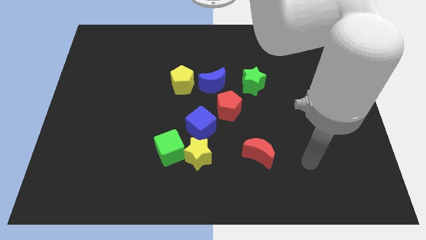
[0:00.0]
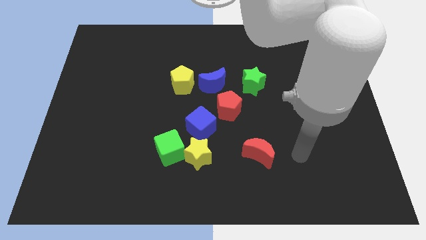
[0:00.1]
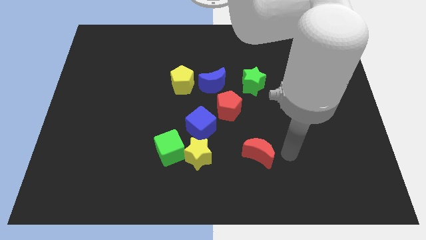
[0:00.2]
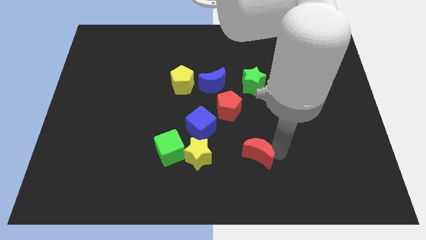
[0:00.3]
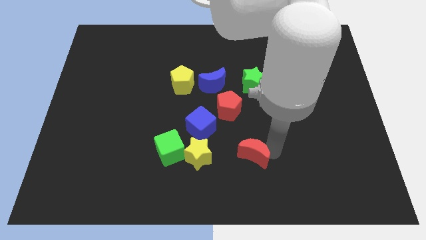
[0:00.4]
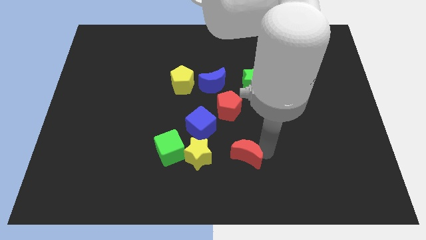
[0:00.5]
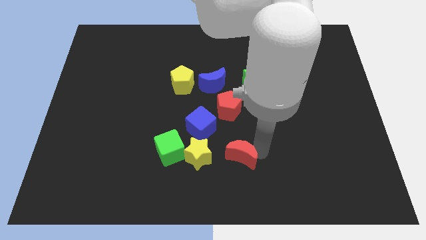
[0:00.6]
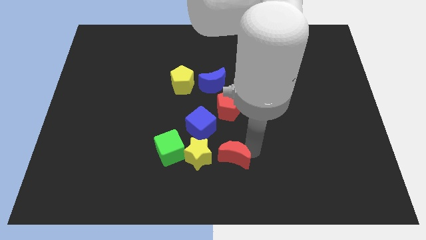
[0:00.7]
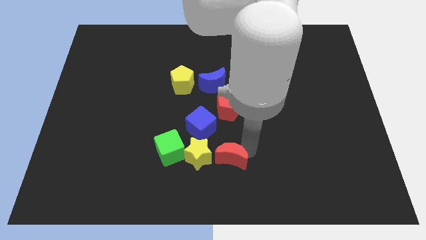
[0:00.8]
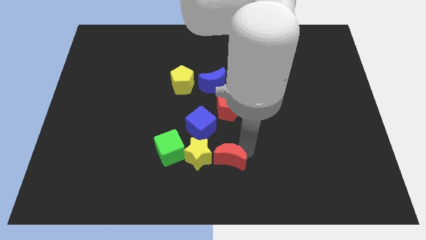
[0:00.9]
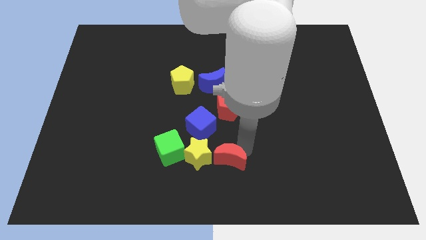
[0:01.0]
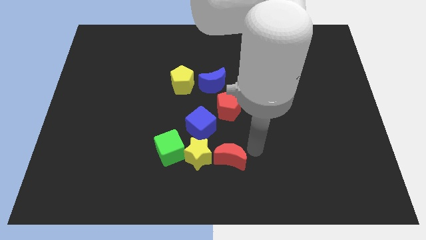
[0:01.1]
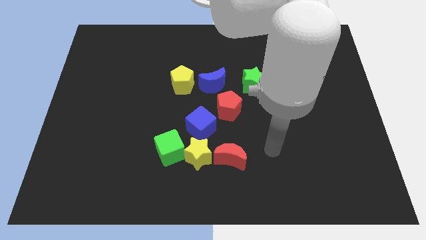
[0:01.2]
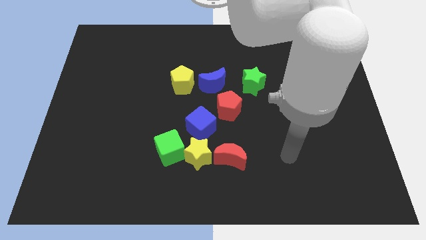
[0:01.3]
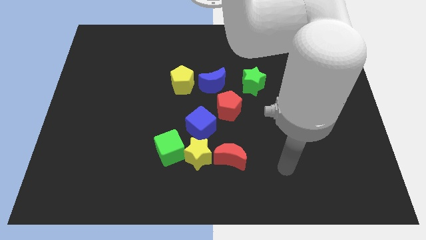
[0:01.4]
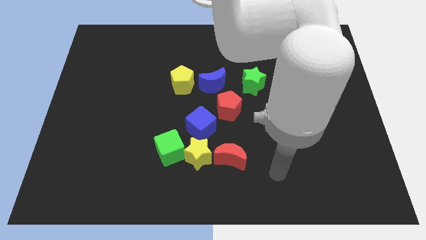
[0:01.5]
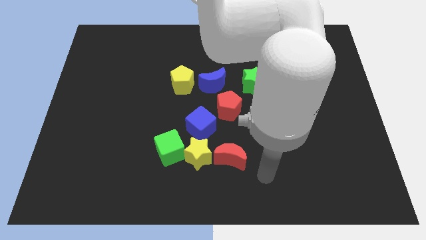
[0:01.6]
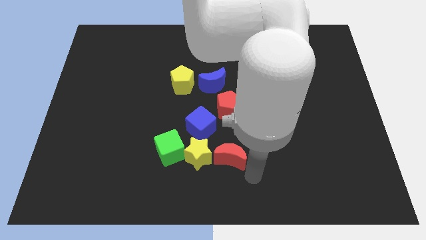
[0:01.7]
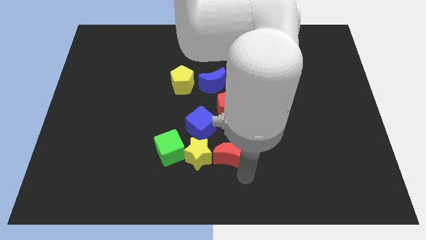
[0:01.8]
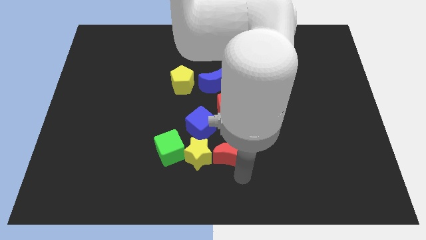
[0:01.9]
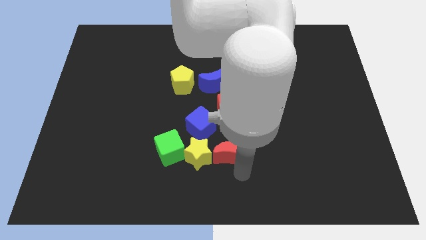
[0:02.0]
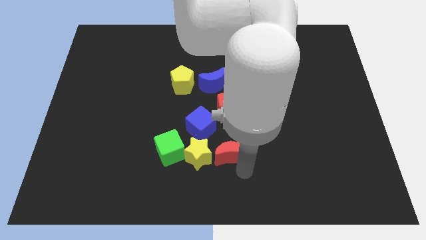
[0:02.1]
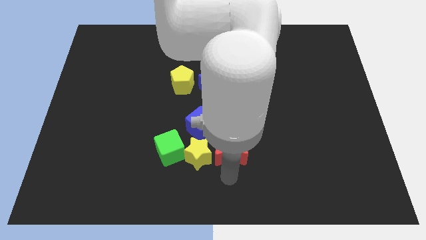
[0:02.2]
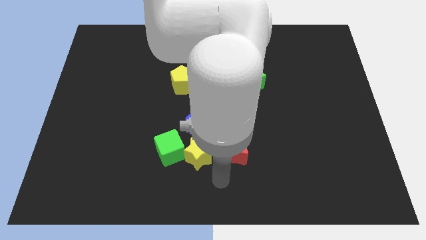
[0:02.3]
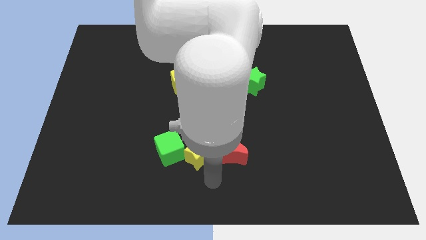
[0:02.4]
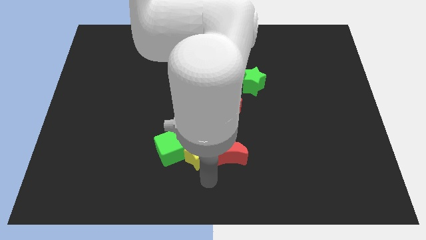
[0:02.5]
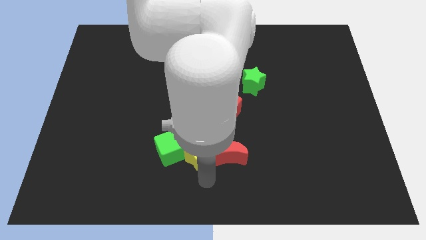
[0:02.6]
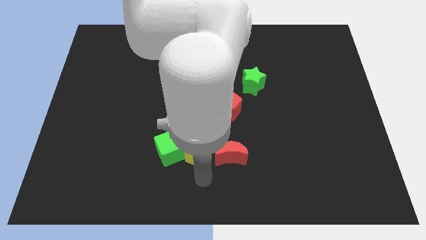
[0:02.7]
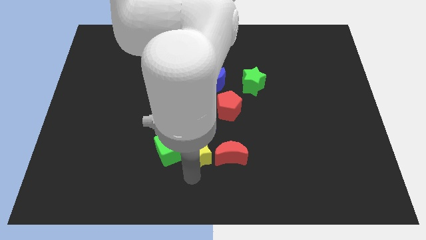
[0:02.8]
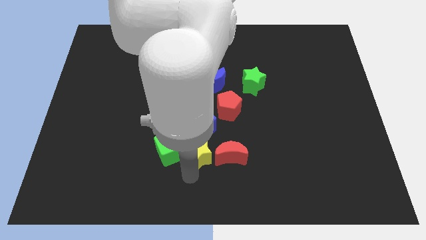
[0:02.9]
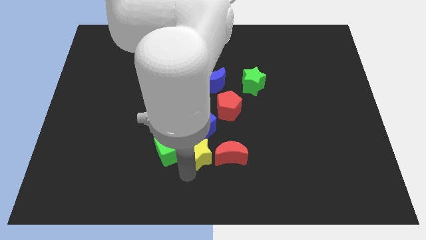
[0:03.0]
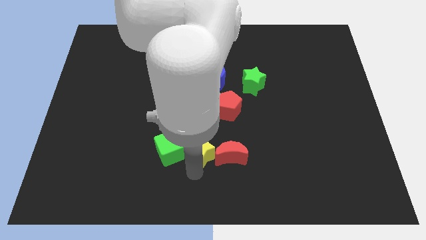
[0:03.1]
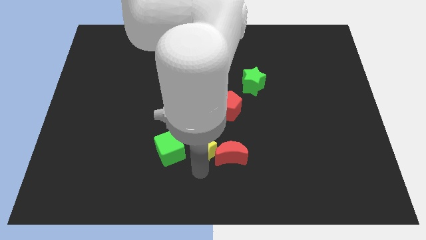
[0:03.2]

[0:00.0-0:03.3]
make a horizontal line with the red moon yellow star and green cube

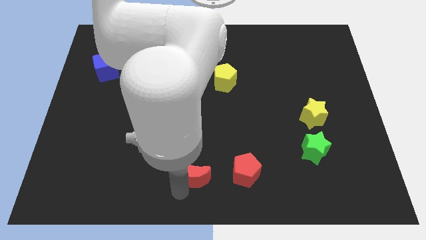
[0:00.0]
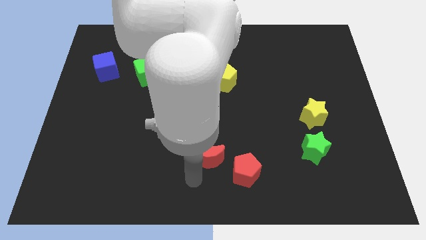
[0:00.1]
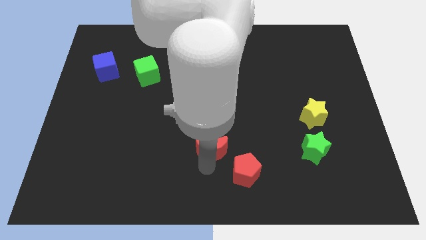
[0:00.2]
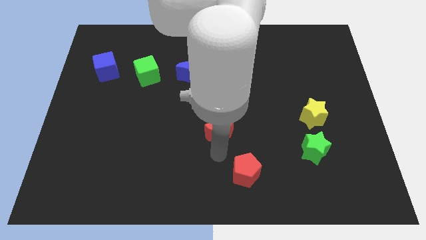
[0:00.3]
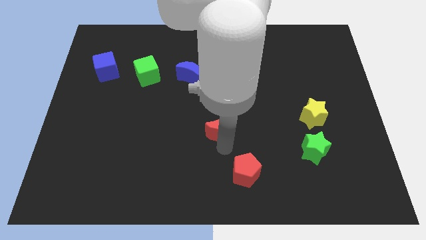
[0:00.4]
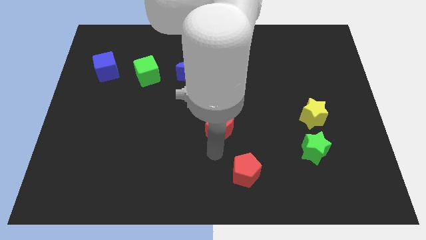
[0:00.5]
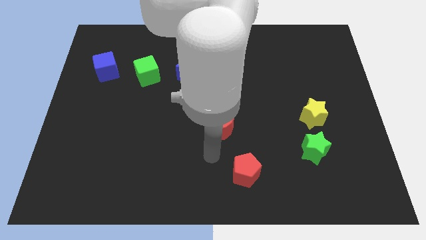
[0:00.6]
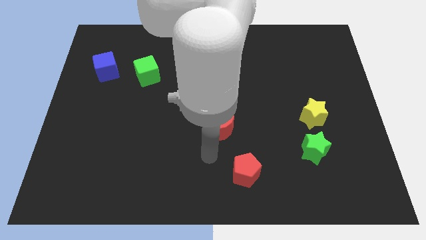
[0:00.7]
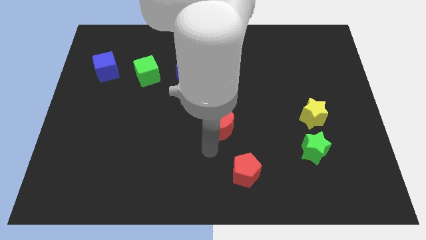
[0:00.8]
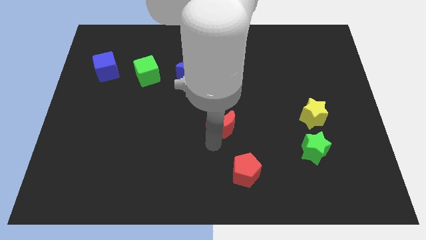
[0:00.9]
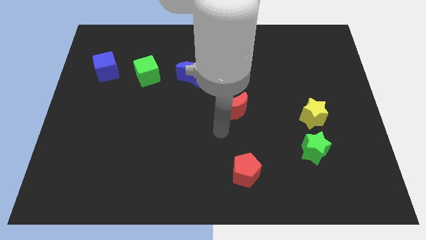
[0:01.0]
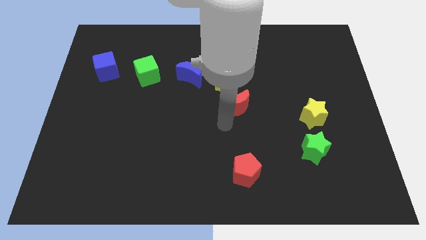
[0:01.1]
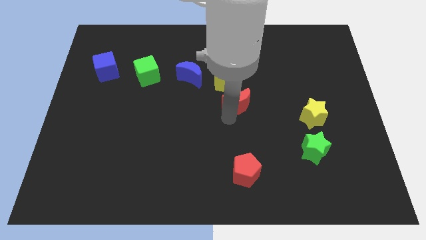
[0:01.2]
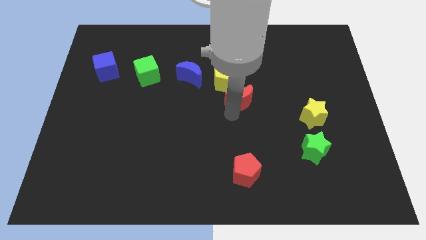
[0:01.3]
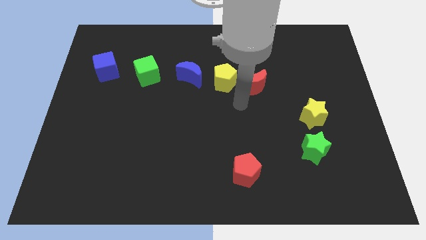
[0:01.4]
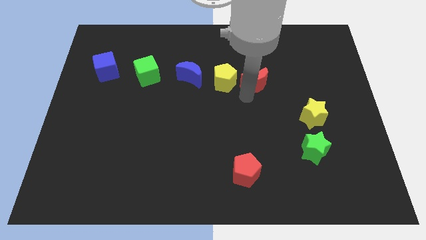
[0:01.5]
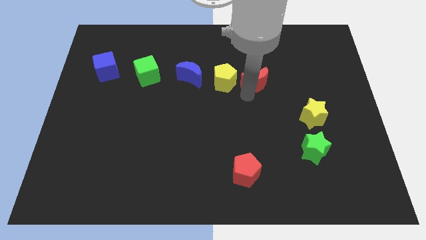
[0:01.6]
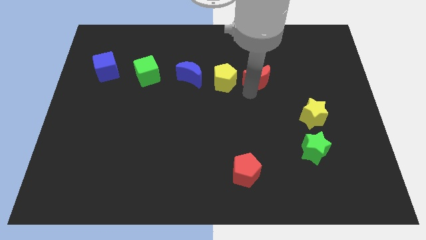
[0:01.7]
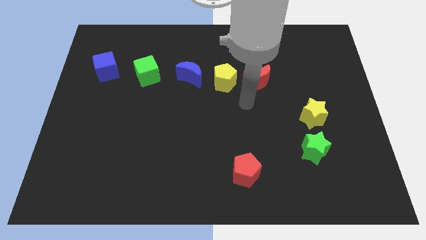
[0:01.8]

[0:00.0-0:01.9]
place red crescent beside yellow pentagon

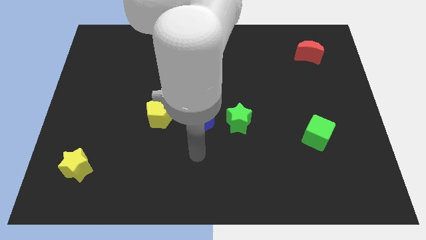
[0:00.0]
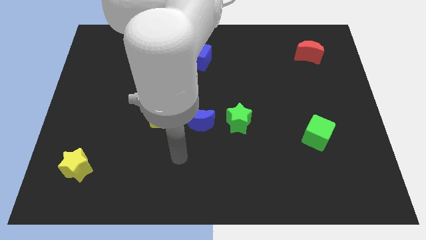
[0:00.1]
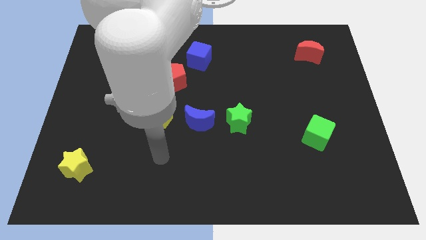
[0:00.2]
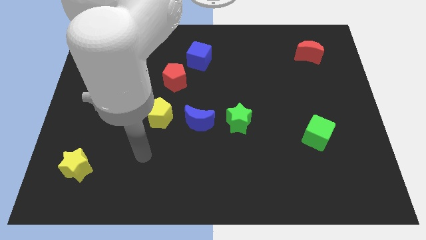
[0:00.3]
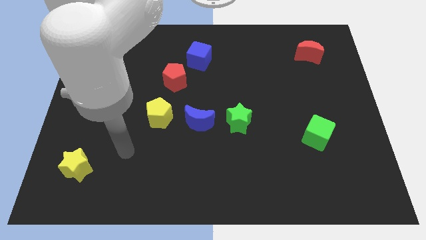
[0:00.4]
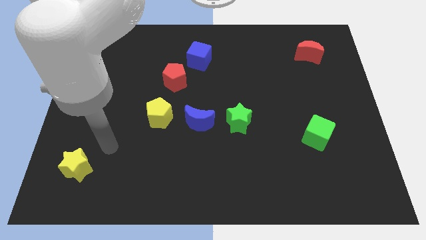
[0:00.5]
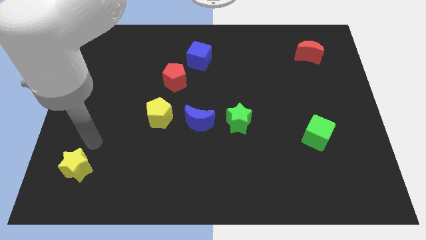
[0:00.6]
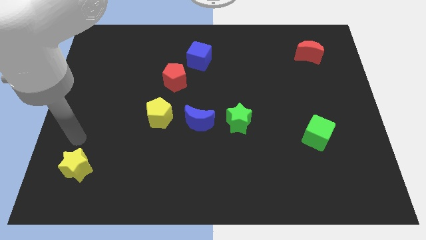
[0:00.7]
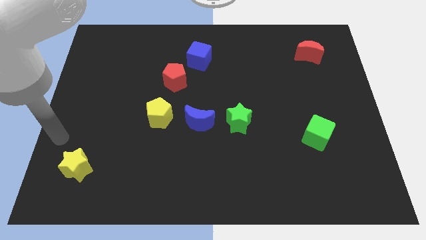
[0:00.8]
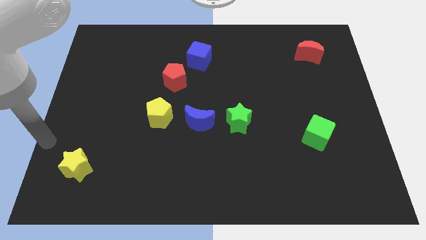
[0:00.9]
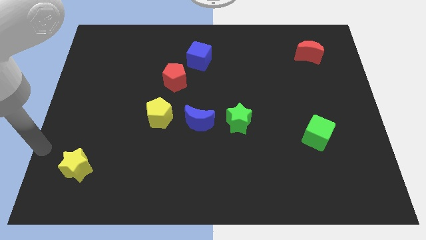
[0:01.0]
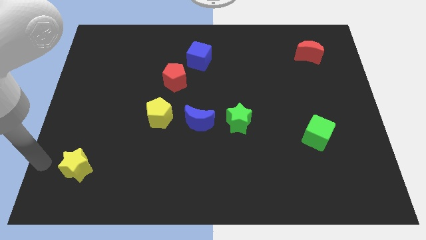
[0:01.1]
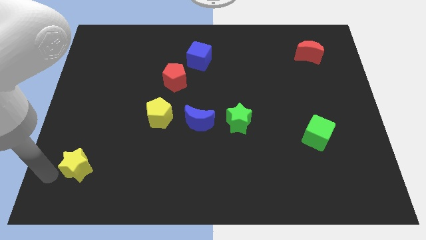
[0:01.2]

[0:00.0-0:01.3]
point the arm to the left of the yellow star

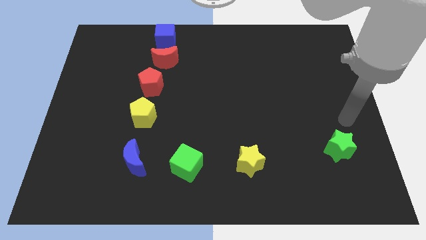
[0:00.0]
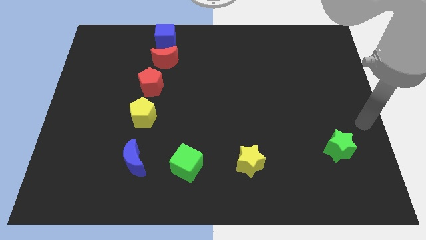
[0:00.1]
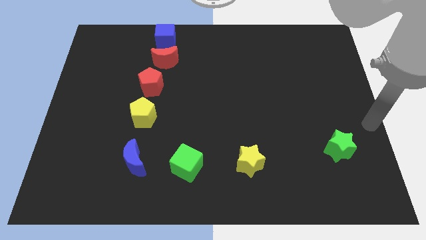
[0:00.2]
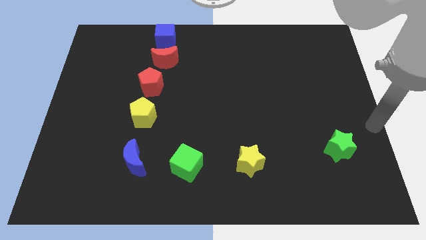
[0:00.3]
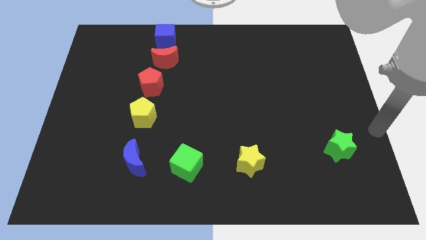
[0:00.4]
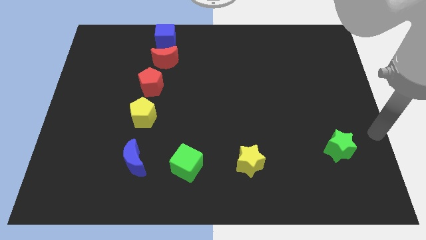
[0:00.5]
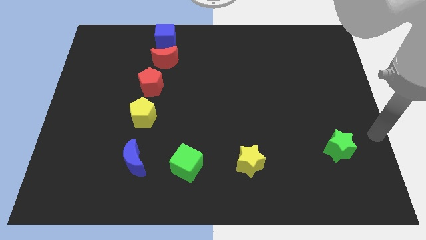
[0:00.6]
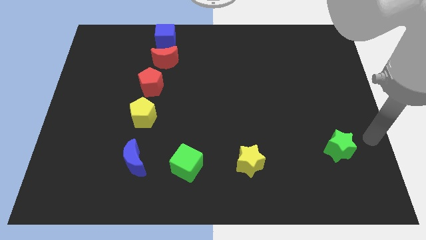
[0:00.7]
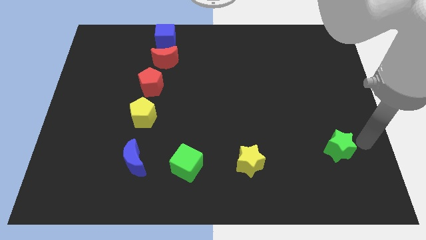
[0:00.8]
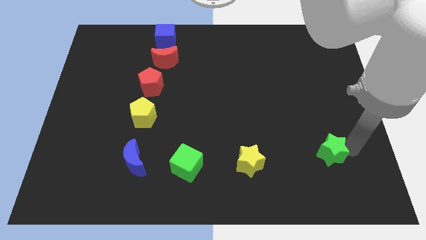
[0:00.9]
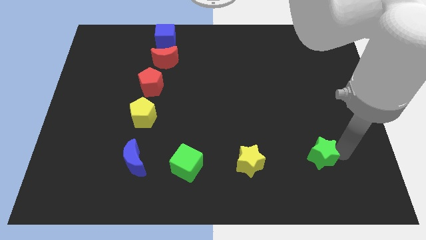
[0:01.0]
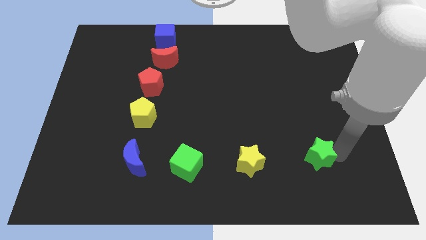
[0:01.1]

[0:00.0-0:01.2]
point the arm to the right side of the green star

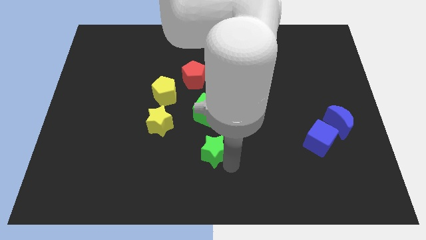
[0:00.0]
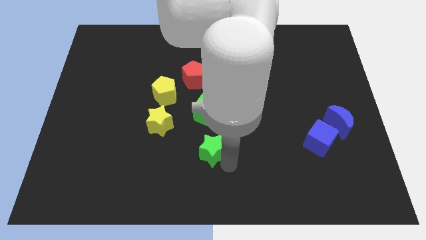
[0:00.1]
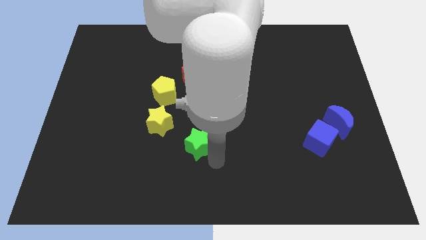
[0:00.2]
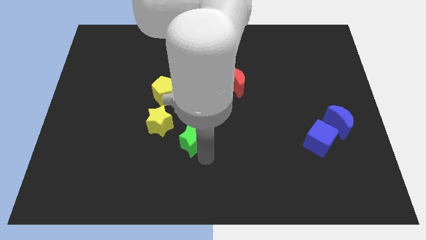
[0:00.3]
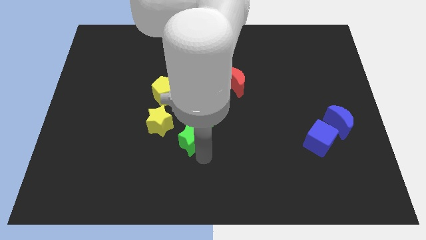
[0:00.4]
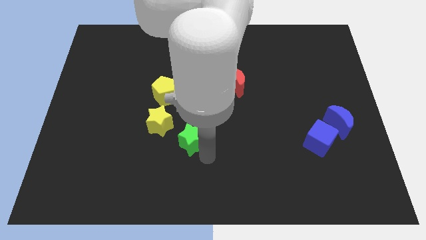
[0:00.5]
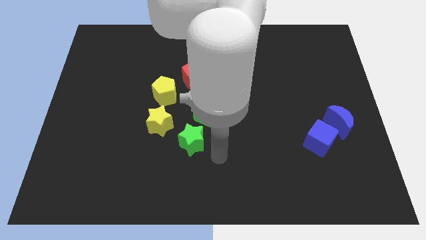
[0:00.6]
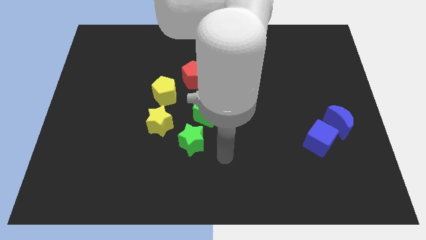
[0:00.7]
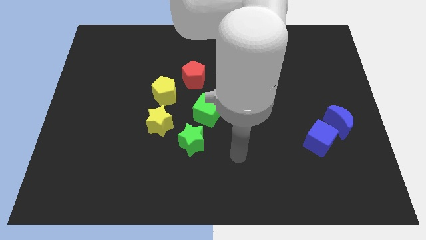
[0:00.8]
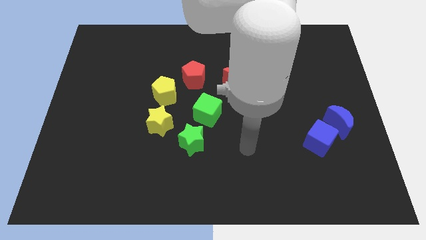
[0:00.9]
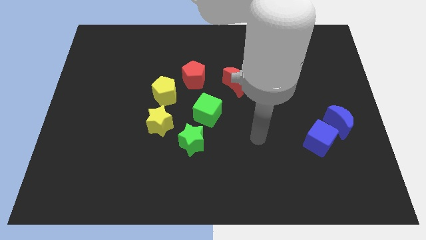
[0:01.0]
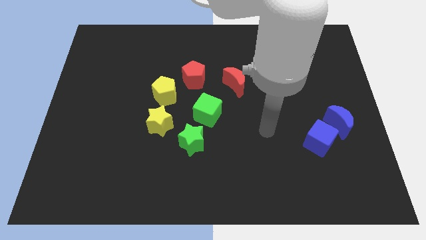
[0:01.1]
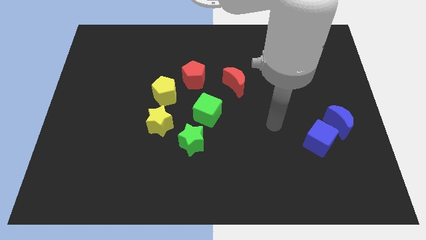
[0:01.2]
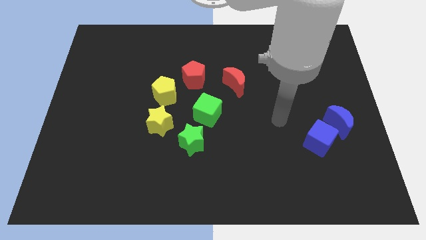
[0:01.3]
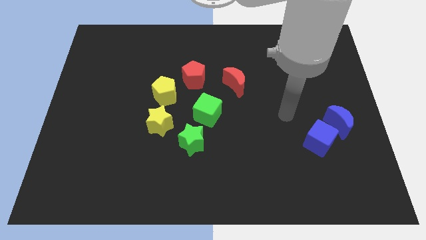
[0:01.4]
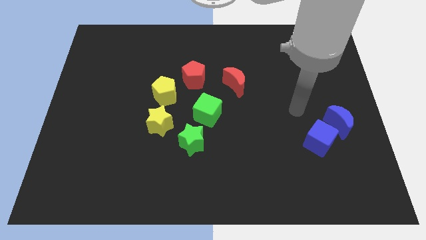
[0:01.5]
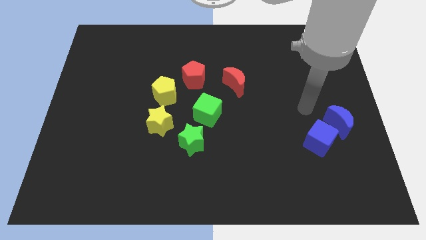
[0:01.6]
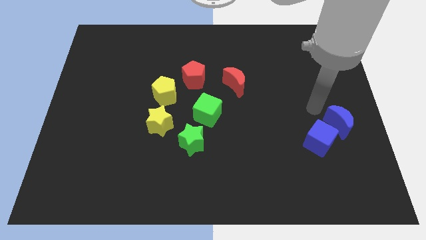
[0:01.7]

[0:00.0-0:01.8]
place the green star below the green cube
